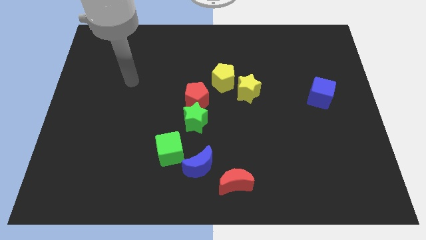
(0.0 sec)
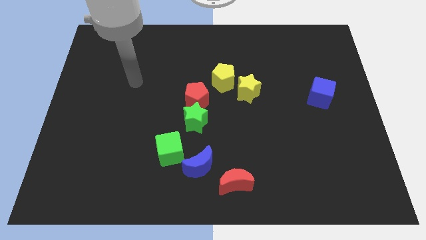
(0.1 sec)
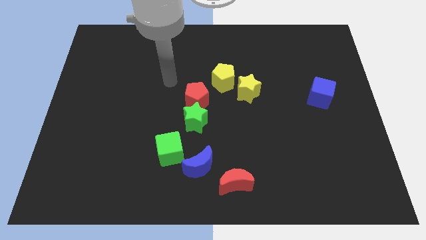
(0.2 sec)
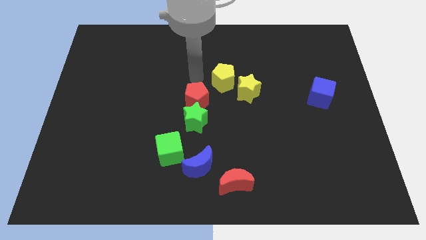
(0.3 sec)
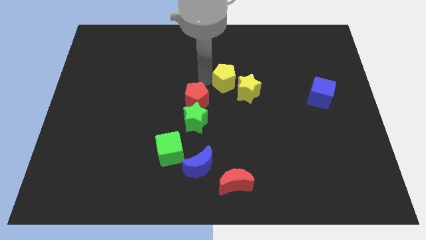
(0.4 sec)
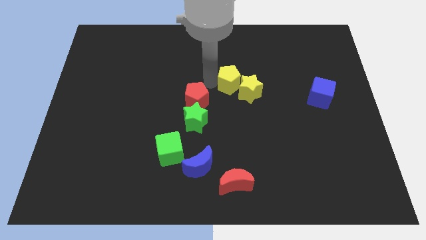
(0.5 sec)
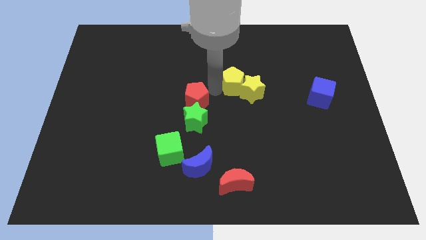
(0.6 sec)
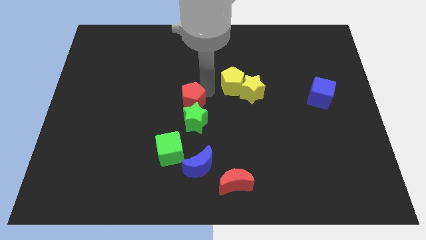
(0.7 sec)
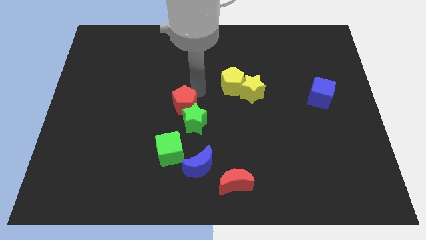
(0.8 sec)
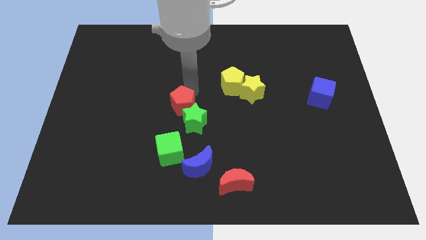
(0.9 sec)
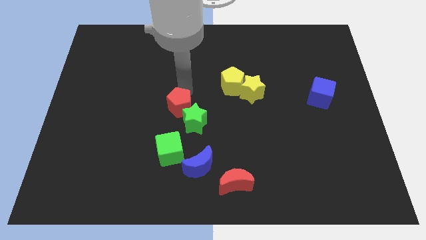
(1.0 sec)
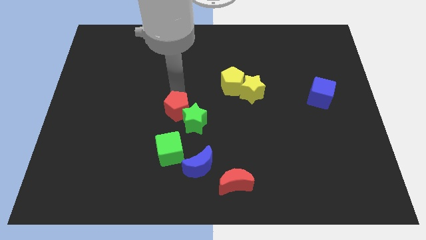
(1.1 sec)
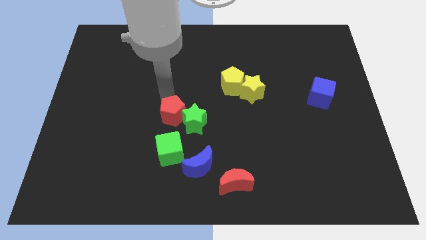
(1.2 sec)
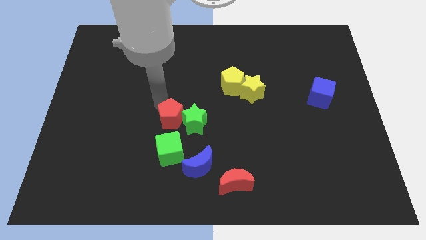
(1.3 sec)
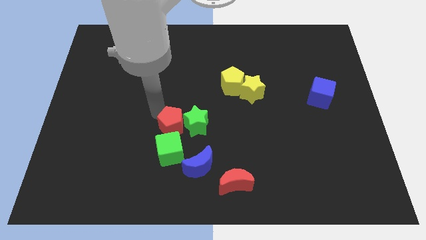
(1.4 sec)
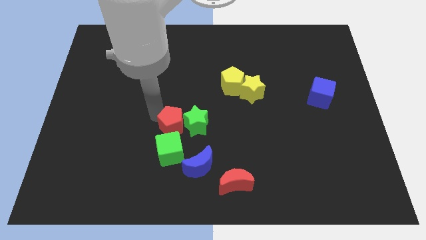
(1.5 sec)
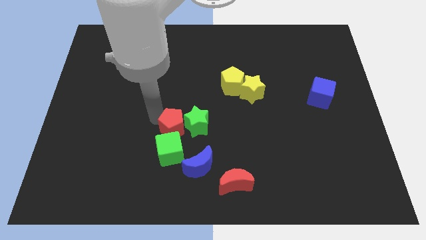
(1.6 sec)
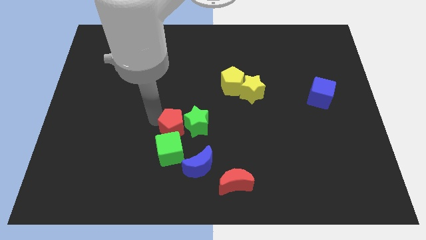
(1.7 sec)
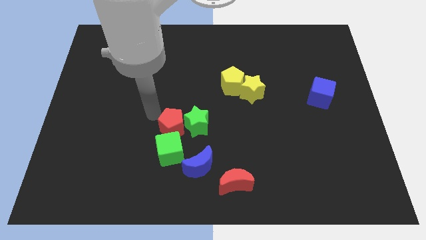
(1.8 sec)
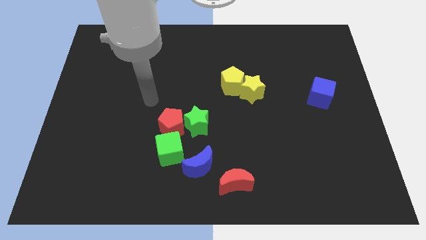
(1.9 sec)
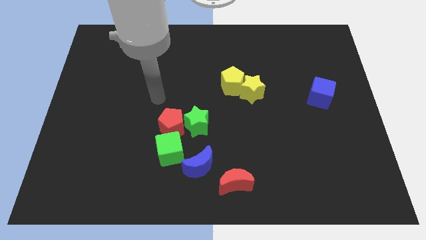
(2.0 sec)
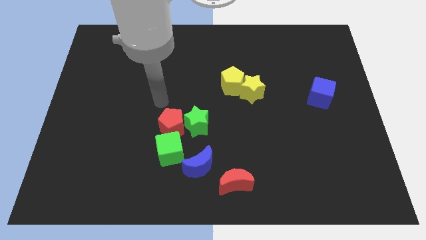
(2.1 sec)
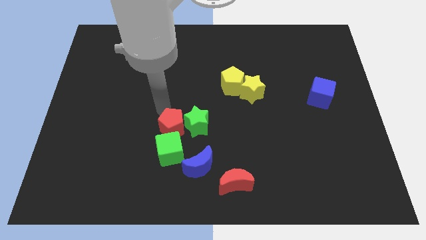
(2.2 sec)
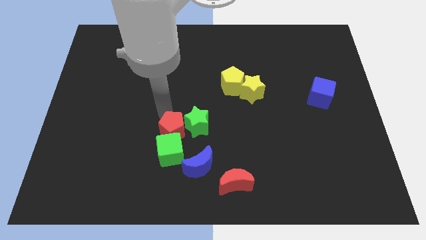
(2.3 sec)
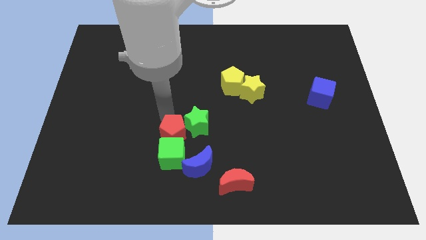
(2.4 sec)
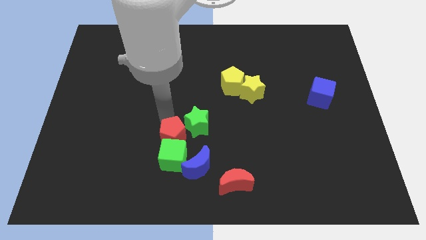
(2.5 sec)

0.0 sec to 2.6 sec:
push the red pentagon towards the green cube

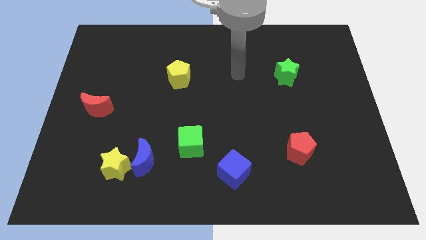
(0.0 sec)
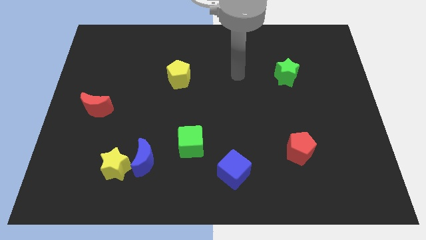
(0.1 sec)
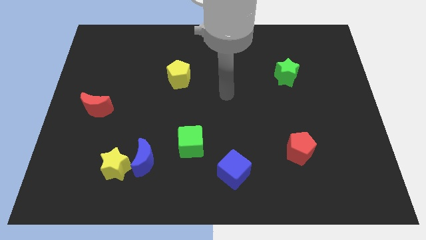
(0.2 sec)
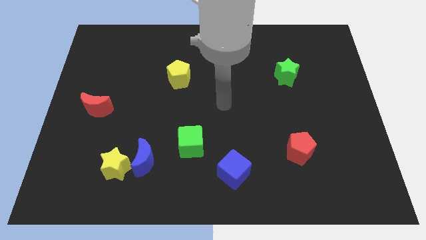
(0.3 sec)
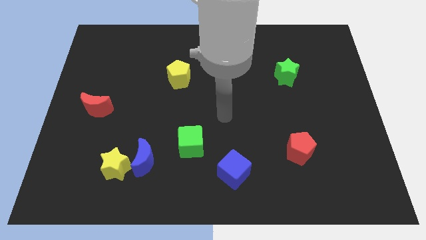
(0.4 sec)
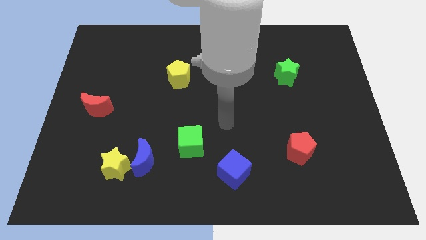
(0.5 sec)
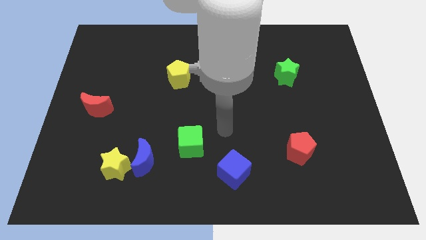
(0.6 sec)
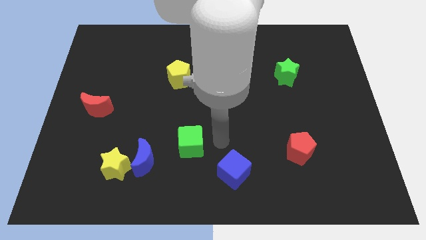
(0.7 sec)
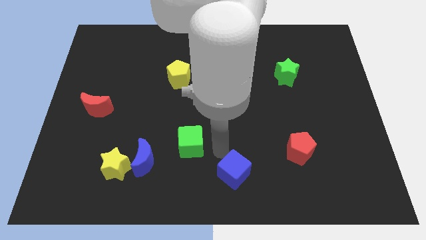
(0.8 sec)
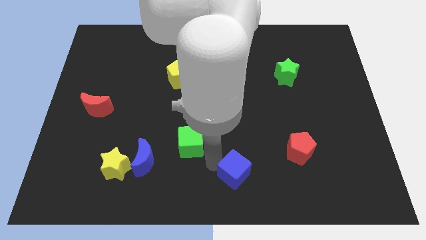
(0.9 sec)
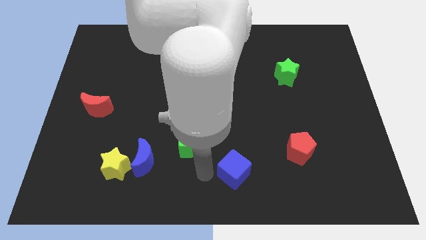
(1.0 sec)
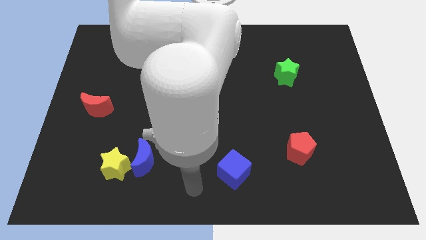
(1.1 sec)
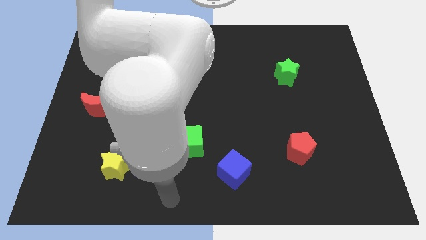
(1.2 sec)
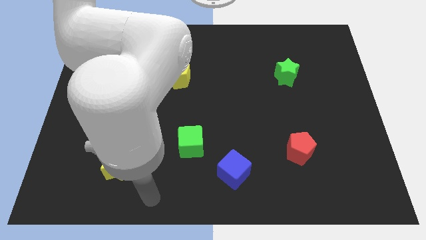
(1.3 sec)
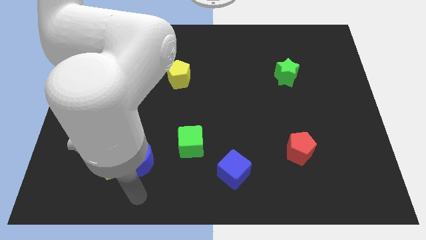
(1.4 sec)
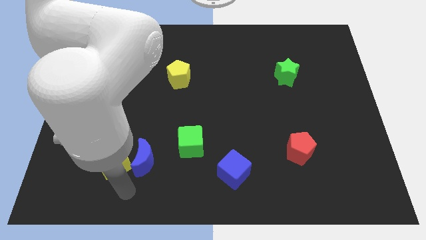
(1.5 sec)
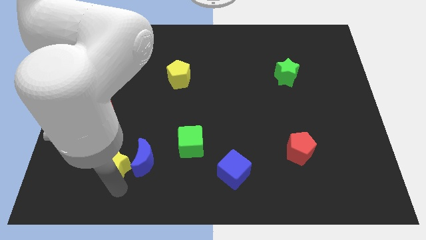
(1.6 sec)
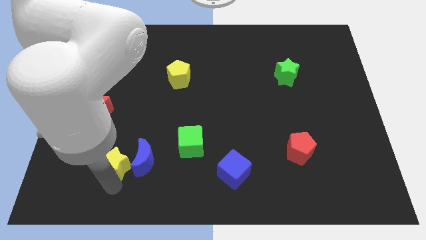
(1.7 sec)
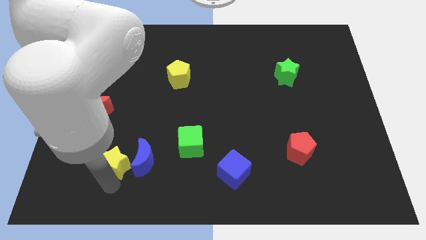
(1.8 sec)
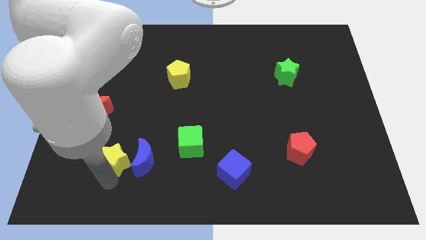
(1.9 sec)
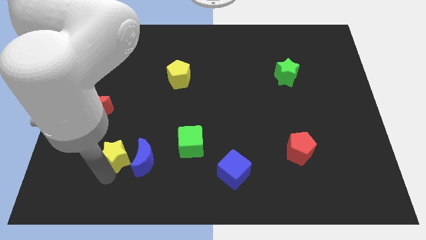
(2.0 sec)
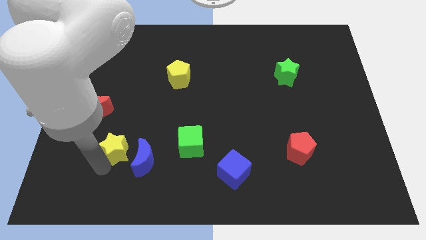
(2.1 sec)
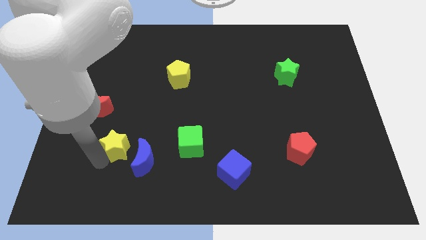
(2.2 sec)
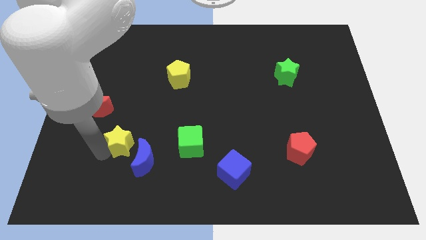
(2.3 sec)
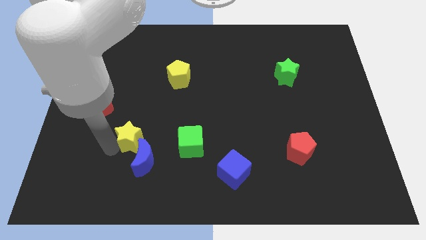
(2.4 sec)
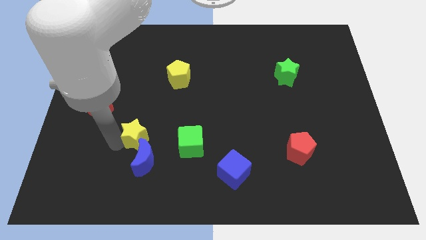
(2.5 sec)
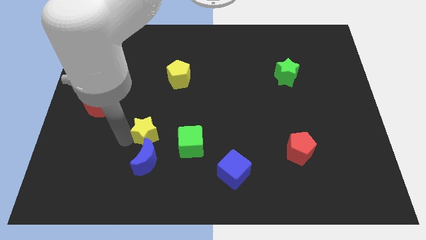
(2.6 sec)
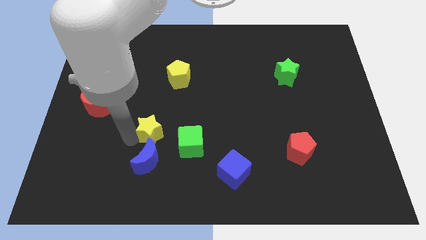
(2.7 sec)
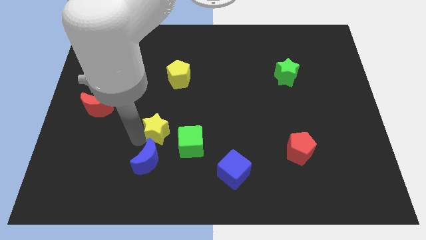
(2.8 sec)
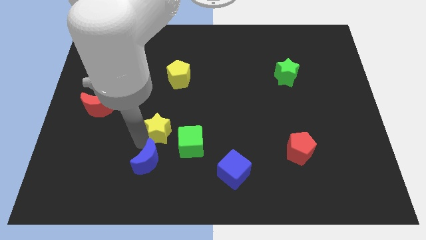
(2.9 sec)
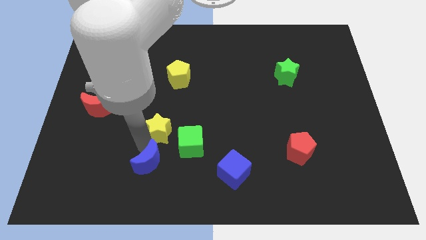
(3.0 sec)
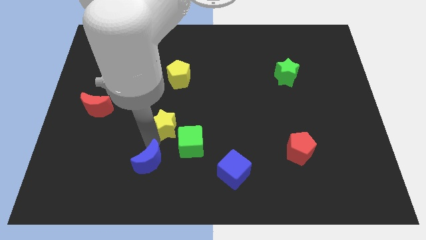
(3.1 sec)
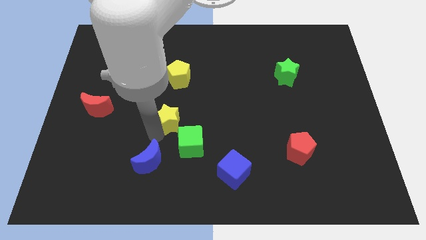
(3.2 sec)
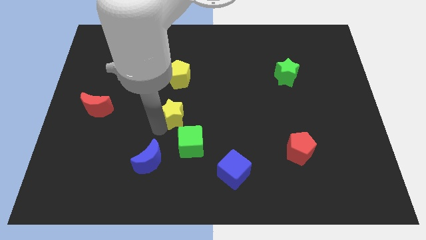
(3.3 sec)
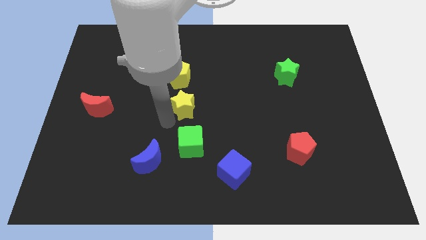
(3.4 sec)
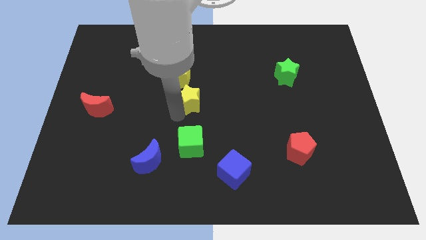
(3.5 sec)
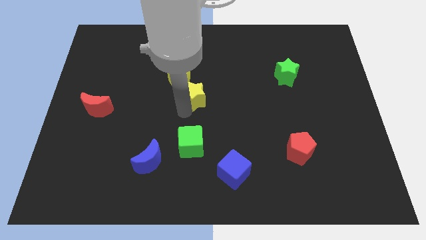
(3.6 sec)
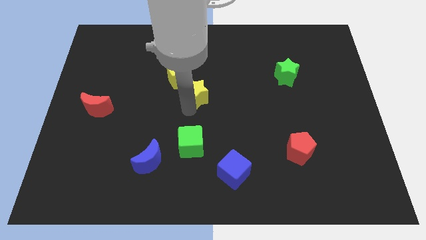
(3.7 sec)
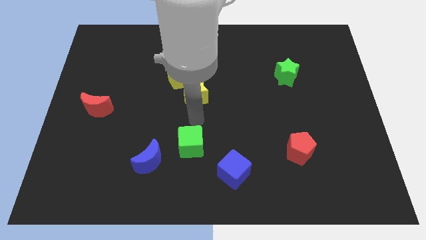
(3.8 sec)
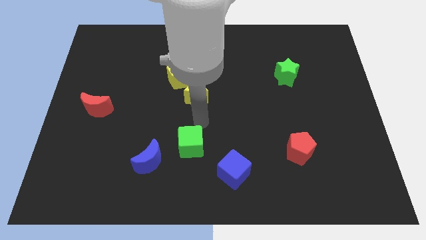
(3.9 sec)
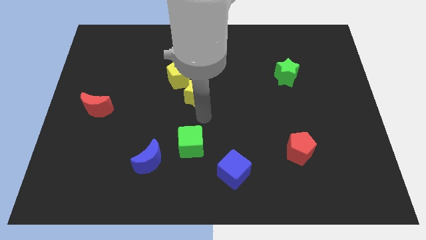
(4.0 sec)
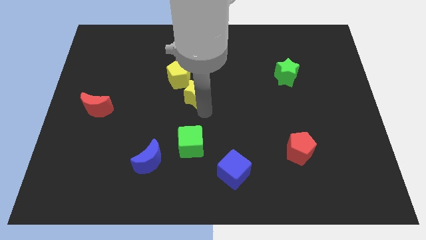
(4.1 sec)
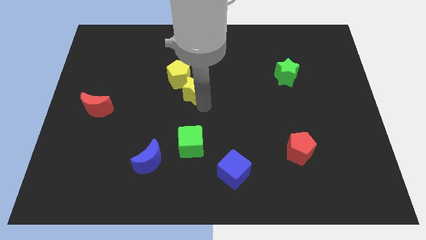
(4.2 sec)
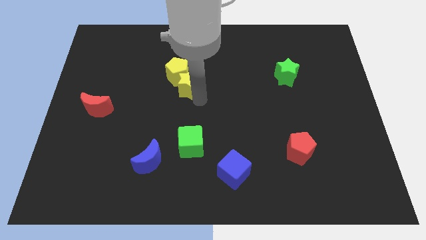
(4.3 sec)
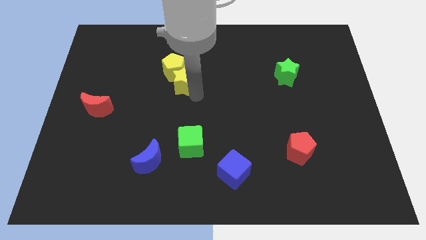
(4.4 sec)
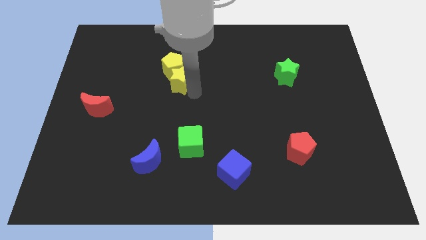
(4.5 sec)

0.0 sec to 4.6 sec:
push the yellow star next to the yellow pentagon

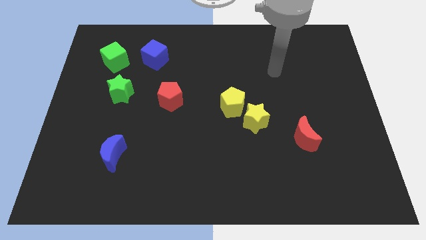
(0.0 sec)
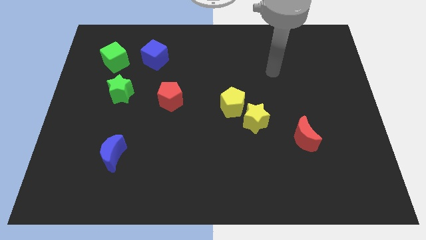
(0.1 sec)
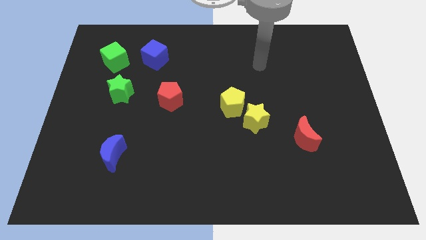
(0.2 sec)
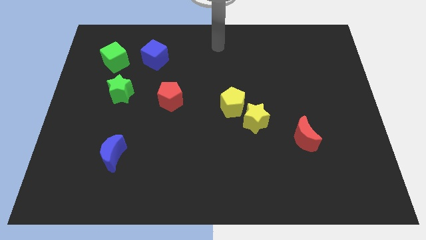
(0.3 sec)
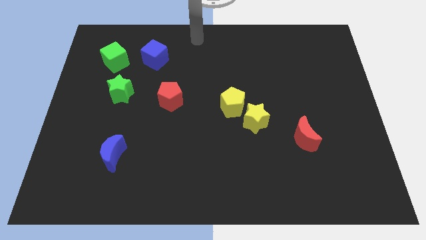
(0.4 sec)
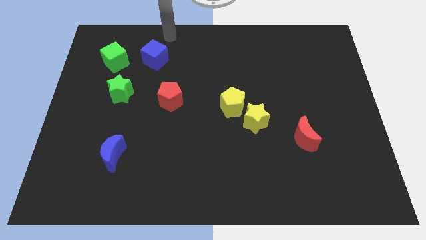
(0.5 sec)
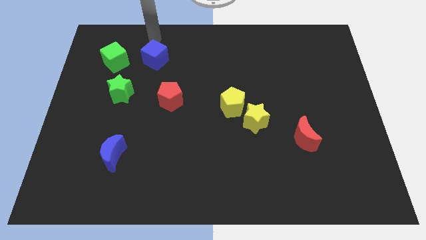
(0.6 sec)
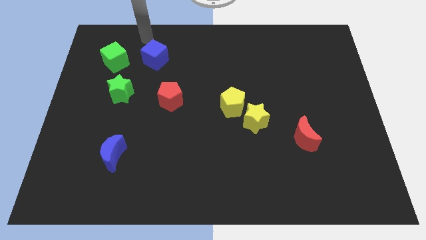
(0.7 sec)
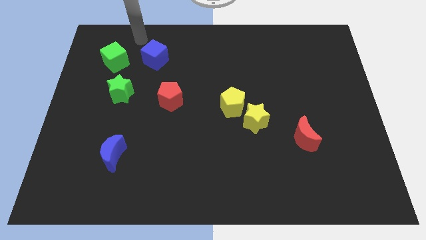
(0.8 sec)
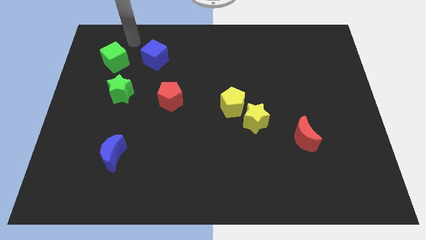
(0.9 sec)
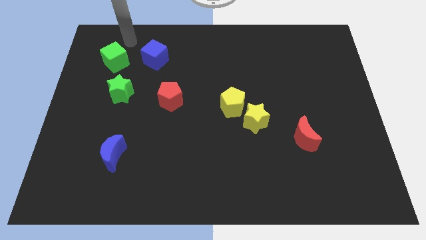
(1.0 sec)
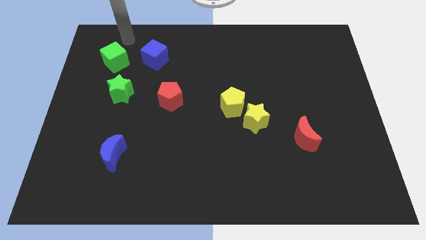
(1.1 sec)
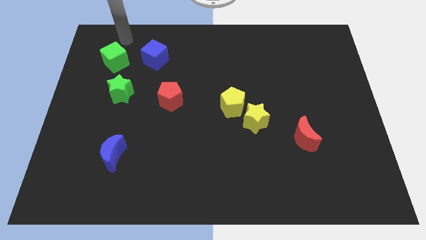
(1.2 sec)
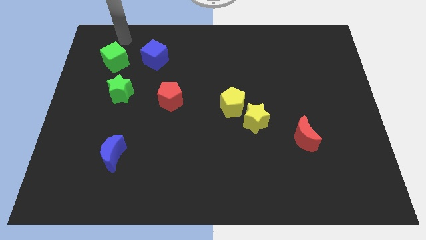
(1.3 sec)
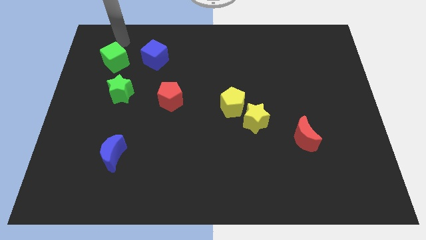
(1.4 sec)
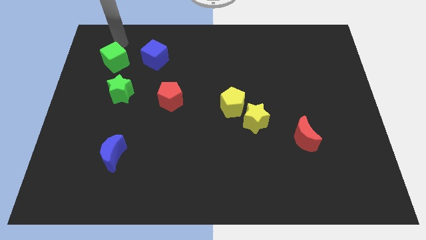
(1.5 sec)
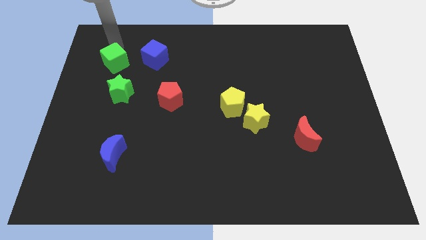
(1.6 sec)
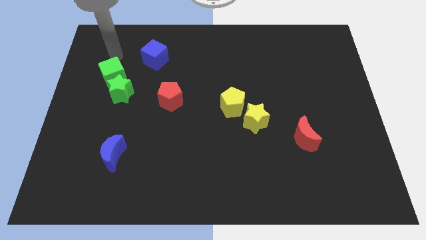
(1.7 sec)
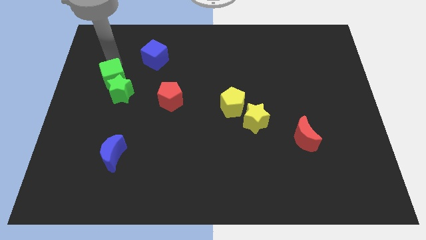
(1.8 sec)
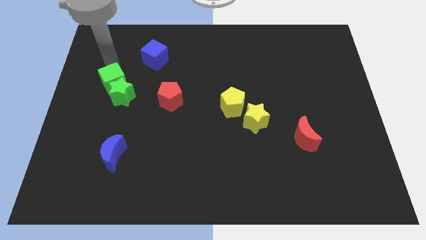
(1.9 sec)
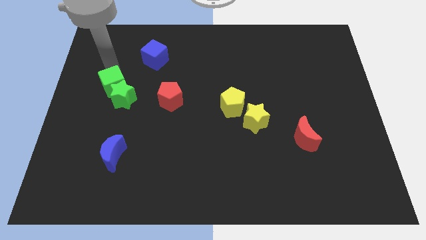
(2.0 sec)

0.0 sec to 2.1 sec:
push the green cube close to the green star
